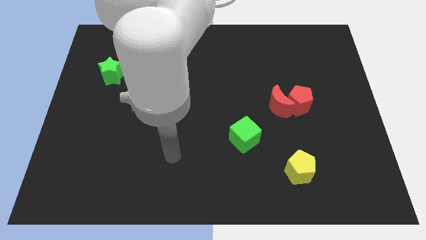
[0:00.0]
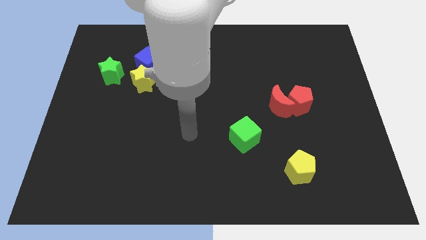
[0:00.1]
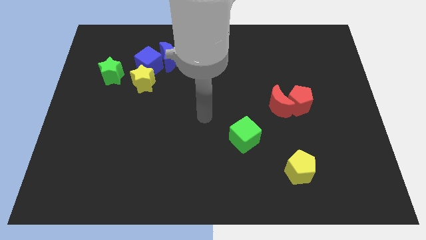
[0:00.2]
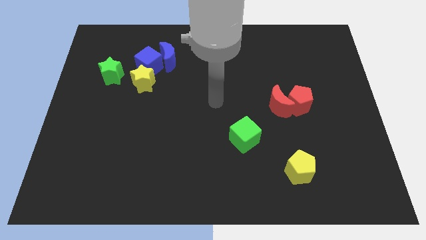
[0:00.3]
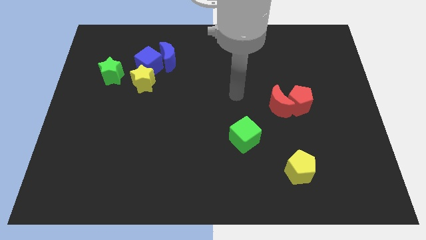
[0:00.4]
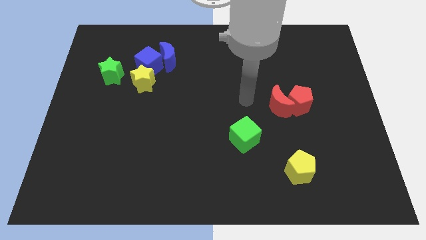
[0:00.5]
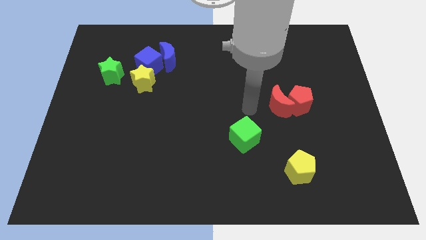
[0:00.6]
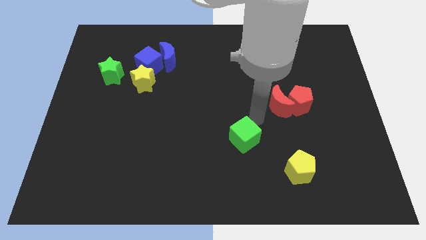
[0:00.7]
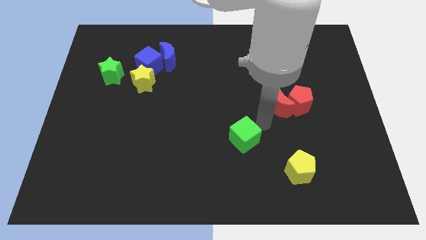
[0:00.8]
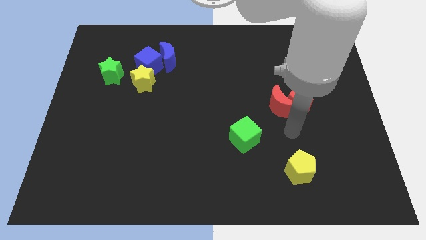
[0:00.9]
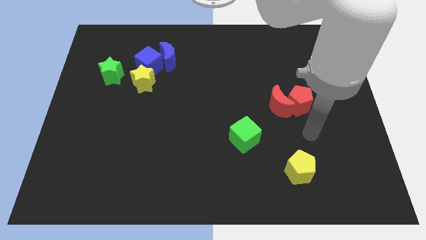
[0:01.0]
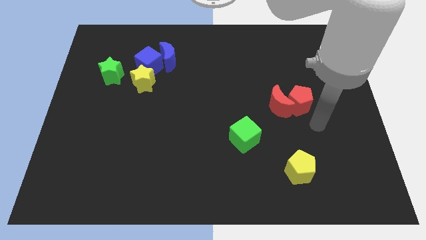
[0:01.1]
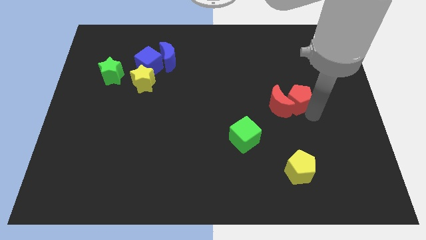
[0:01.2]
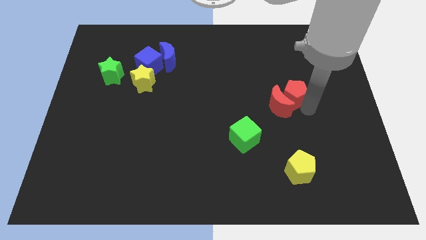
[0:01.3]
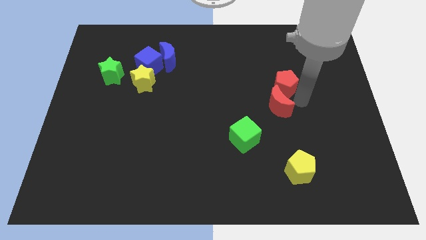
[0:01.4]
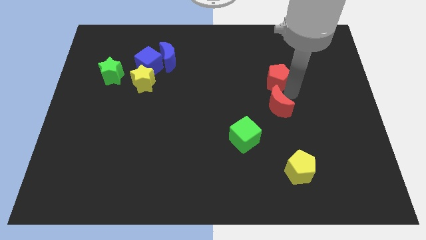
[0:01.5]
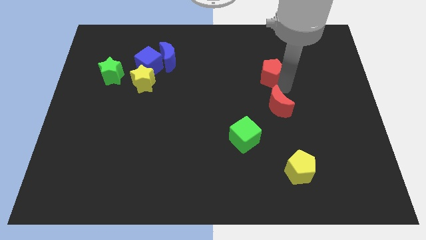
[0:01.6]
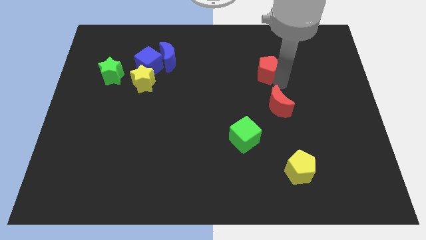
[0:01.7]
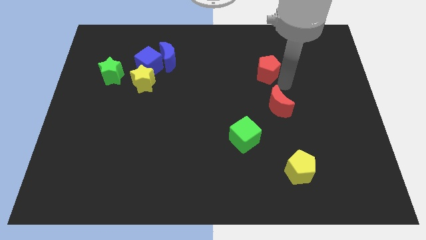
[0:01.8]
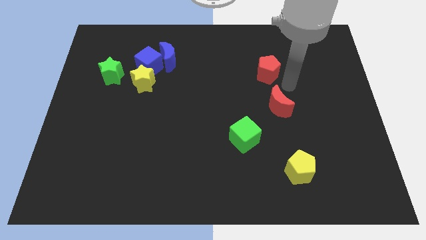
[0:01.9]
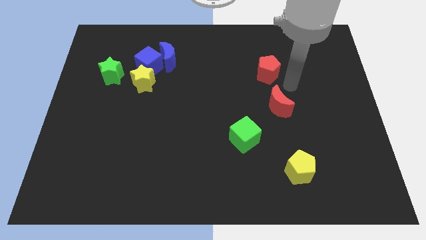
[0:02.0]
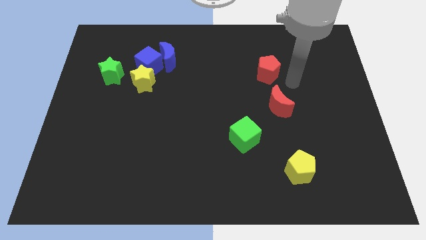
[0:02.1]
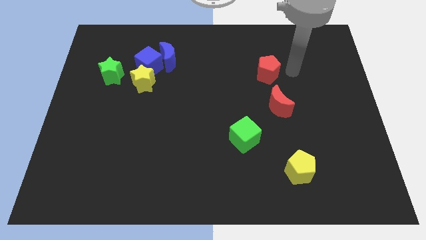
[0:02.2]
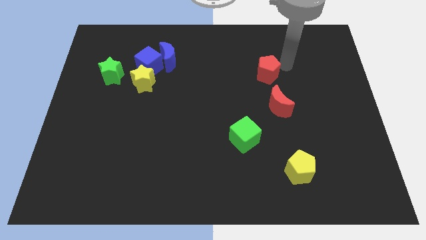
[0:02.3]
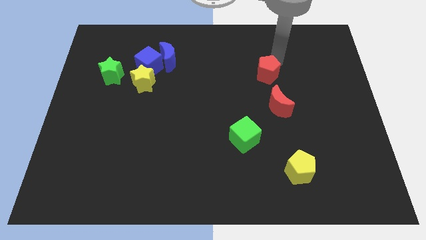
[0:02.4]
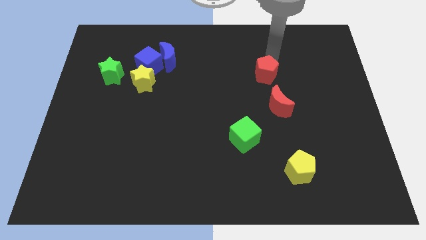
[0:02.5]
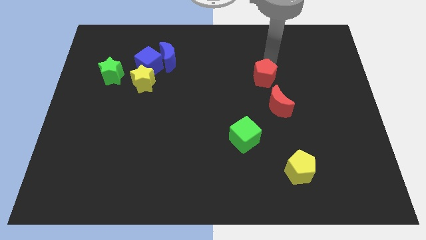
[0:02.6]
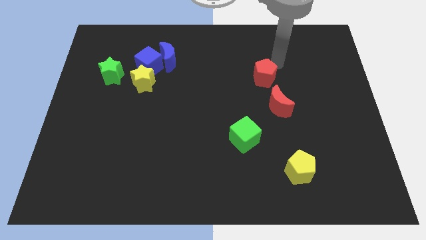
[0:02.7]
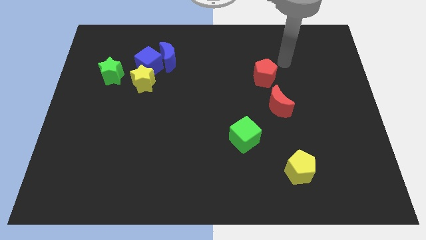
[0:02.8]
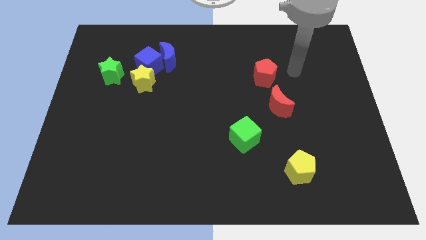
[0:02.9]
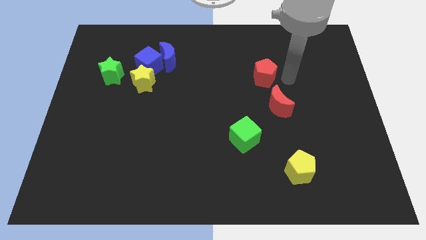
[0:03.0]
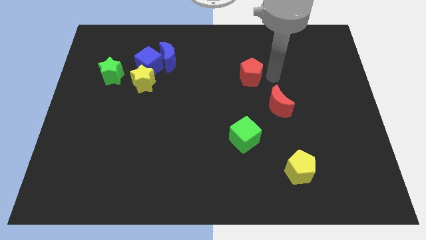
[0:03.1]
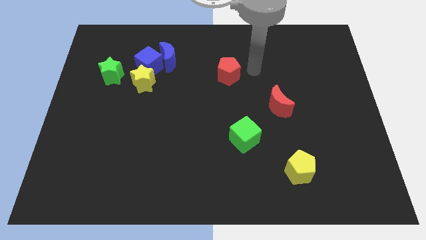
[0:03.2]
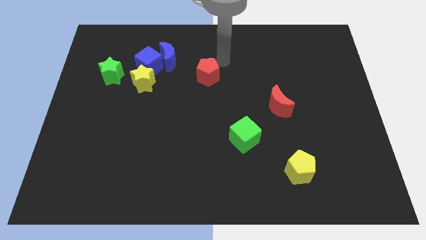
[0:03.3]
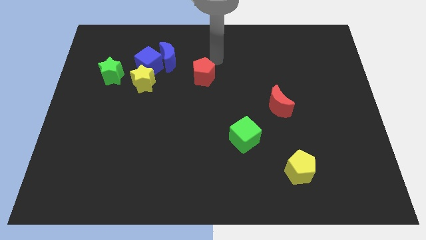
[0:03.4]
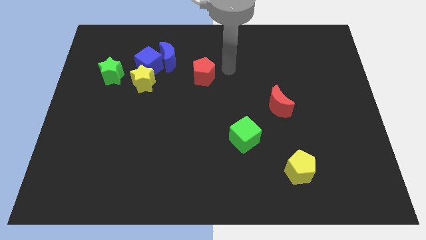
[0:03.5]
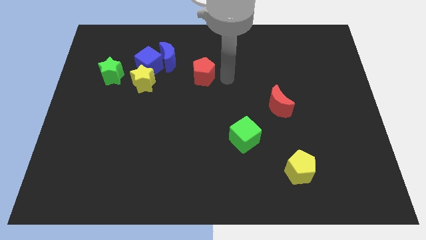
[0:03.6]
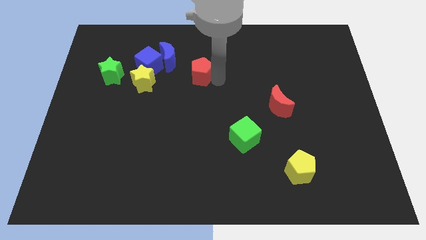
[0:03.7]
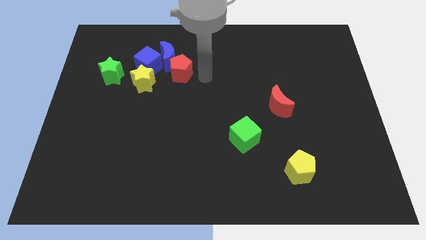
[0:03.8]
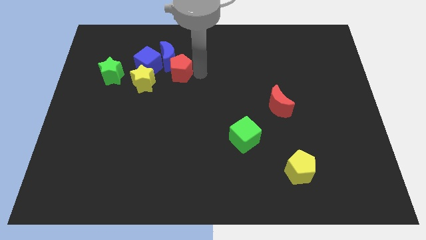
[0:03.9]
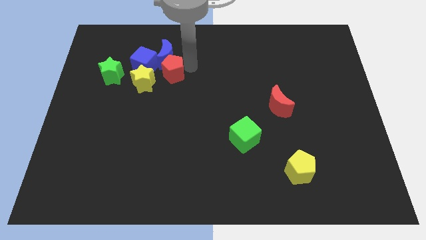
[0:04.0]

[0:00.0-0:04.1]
put the red pentagon next to the blue moon

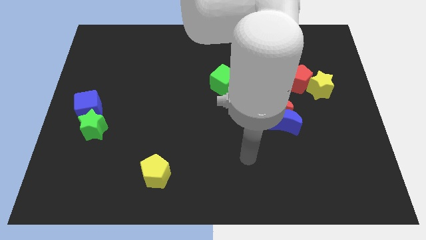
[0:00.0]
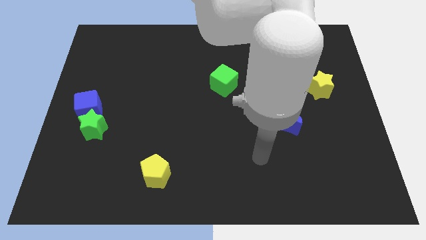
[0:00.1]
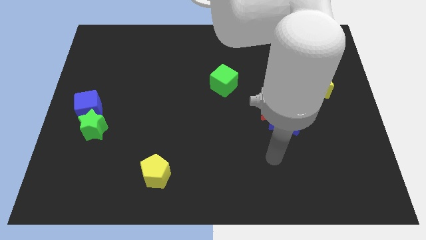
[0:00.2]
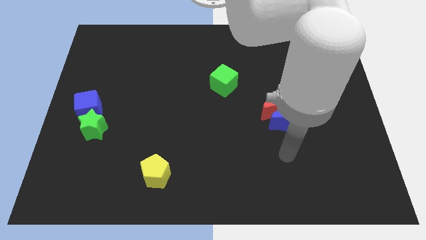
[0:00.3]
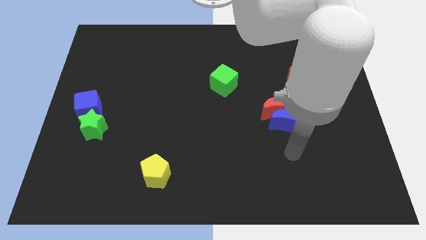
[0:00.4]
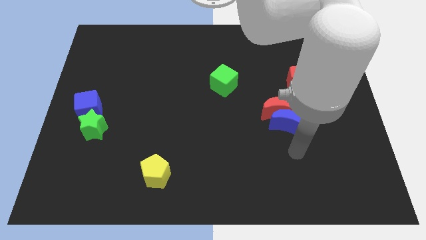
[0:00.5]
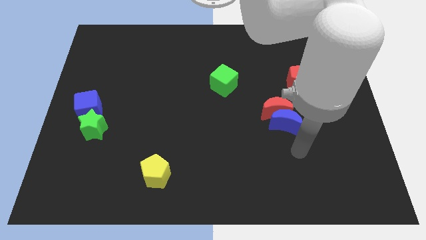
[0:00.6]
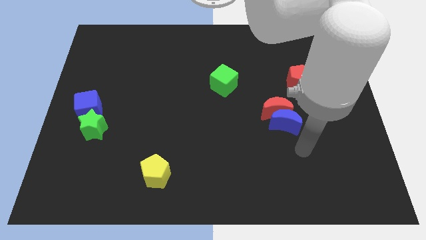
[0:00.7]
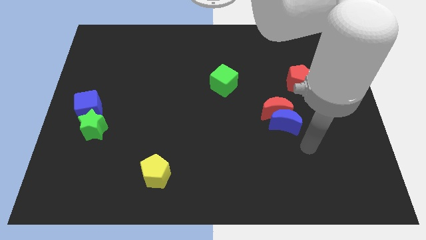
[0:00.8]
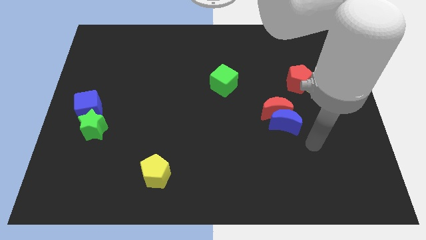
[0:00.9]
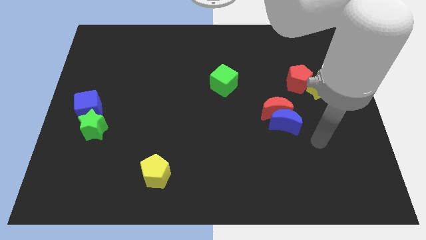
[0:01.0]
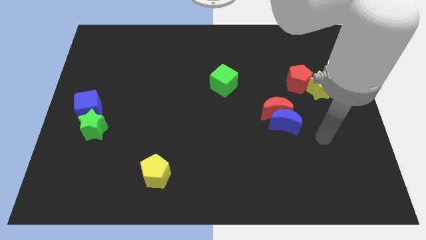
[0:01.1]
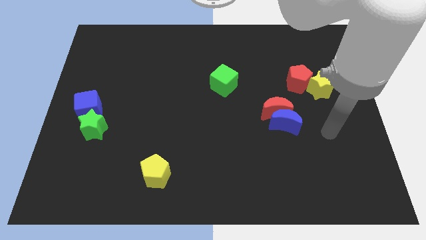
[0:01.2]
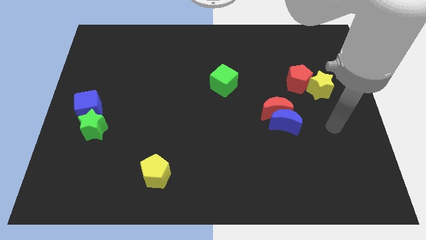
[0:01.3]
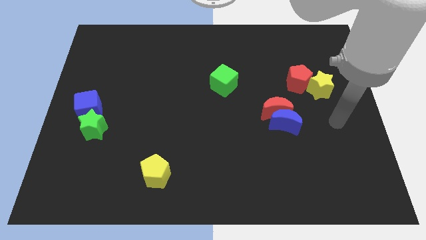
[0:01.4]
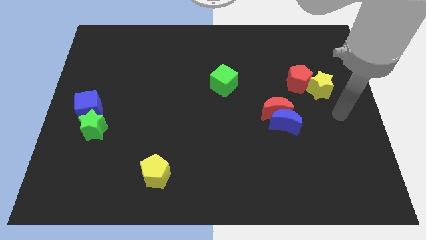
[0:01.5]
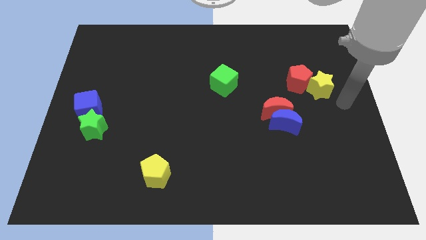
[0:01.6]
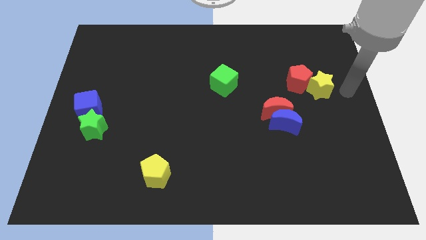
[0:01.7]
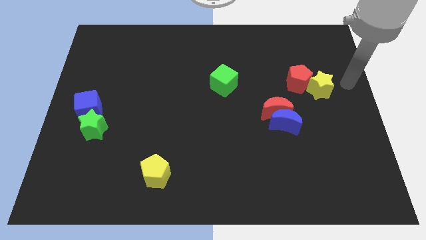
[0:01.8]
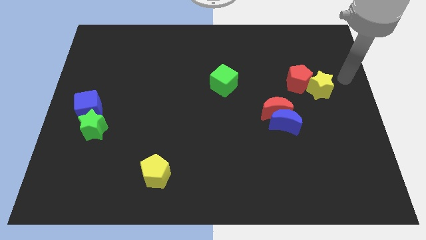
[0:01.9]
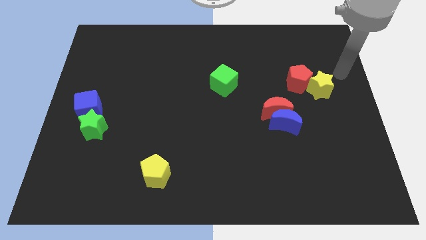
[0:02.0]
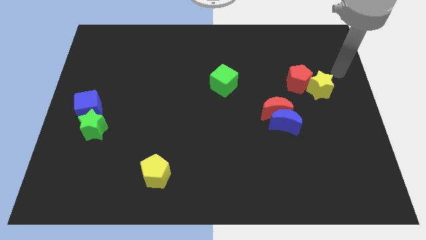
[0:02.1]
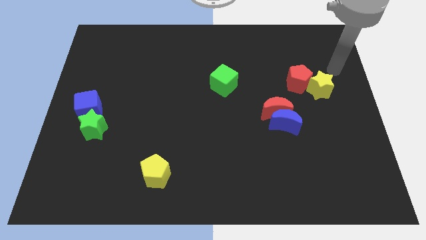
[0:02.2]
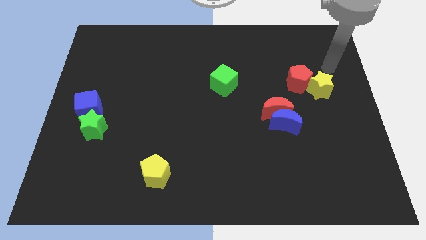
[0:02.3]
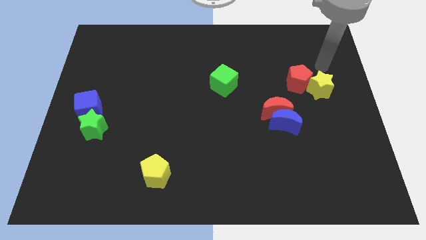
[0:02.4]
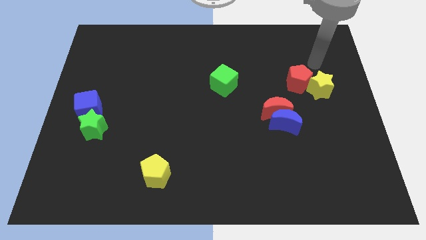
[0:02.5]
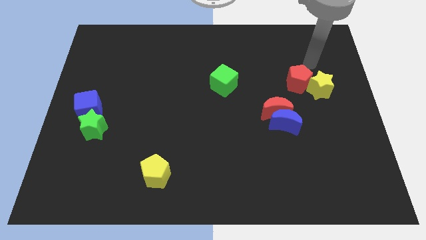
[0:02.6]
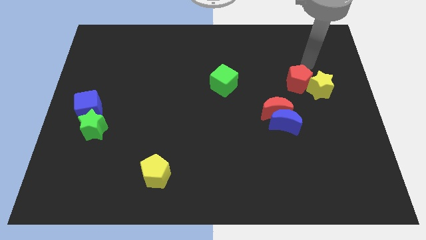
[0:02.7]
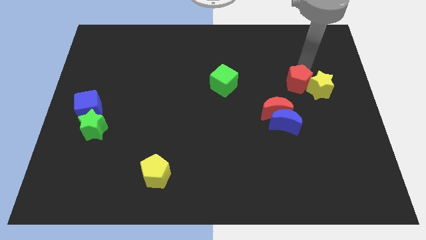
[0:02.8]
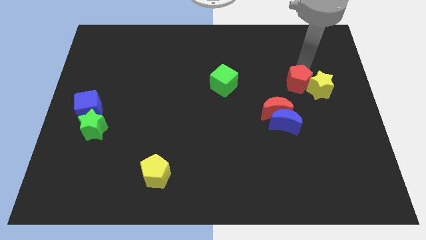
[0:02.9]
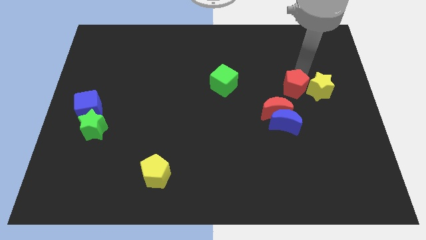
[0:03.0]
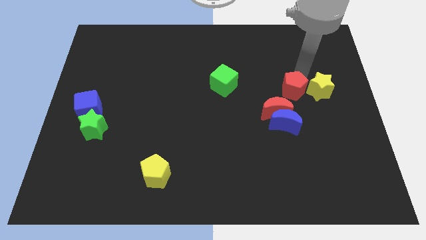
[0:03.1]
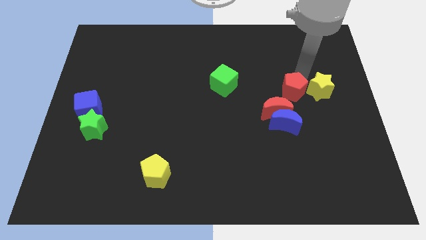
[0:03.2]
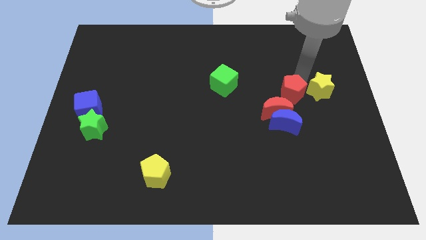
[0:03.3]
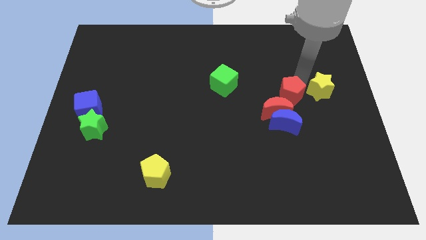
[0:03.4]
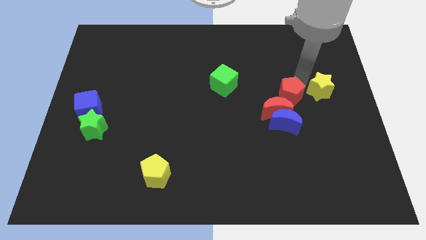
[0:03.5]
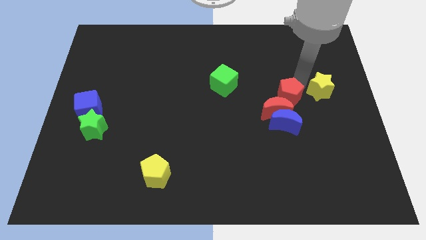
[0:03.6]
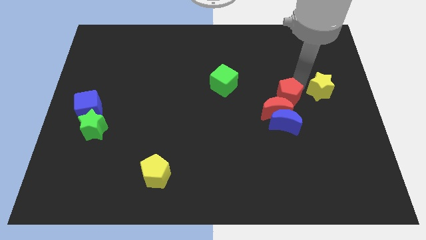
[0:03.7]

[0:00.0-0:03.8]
move the red pentagon next to the red moon

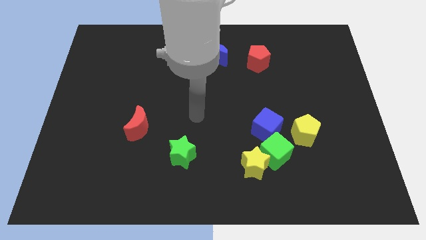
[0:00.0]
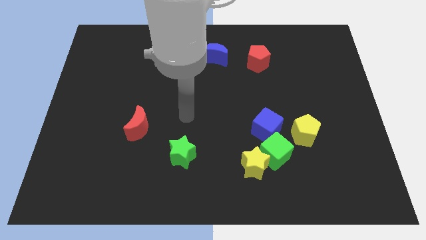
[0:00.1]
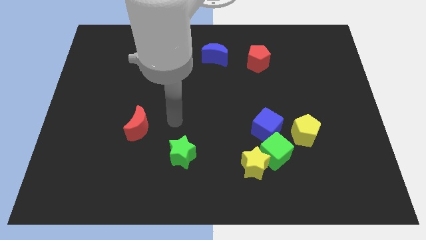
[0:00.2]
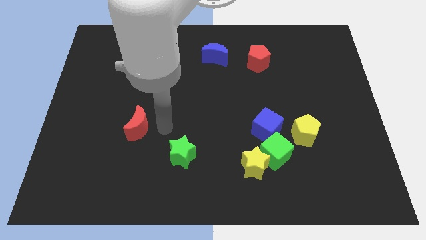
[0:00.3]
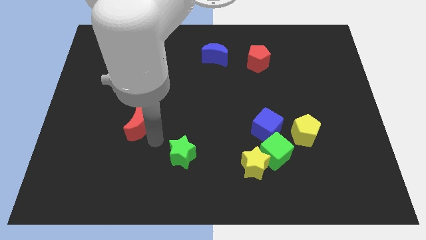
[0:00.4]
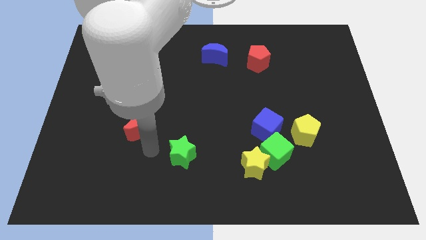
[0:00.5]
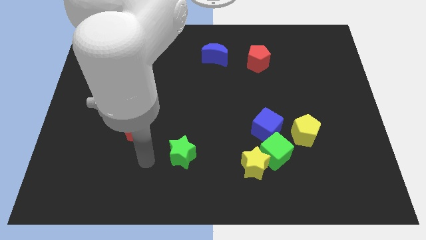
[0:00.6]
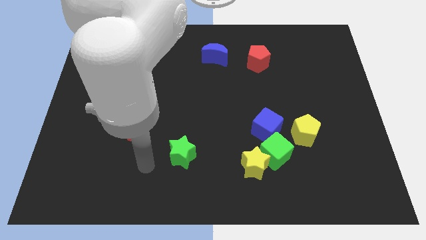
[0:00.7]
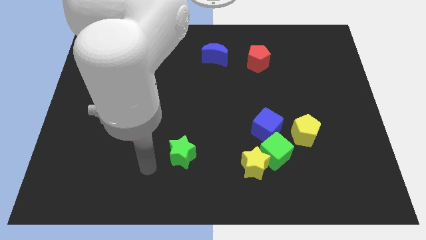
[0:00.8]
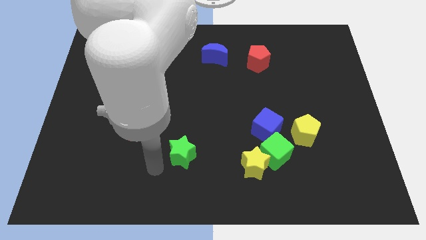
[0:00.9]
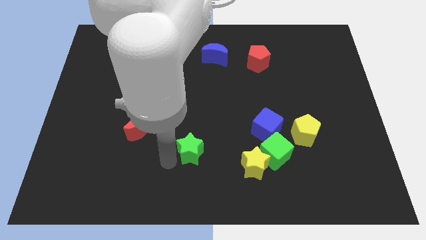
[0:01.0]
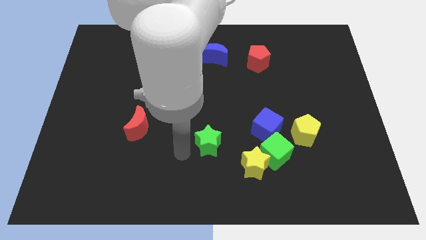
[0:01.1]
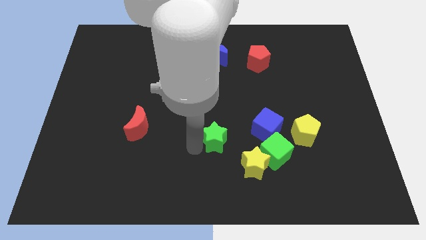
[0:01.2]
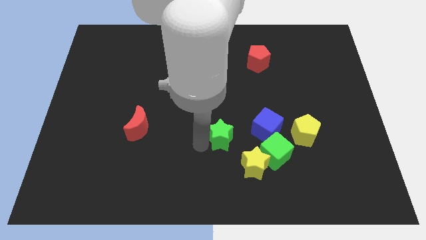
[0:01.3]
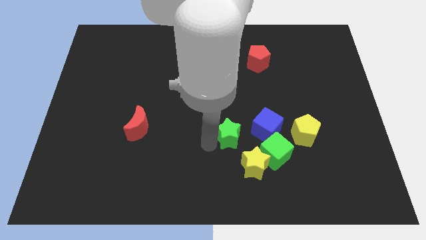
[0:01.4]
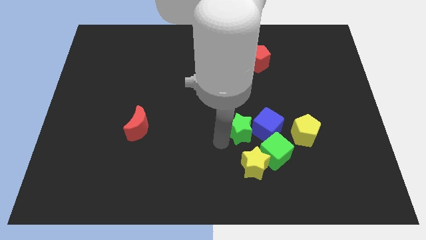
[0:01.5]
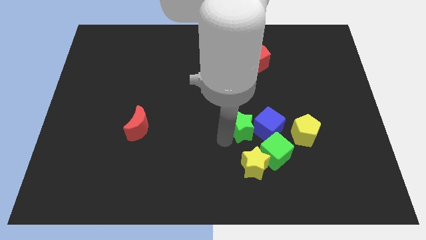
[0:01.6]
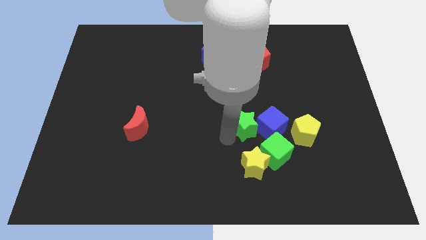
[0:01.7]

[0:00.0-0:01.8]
move the green star next to the blue cube
